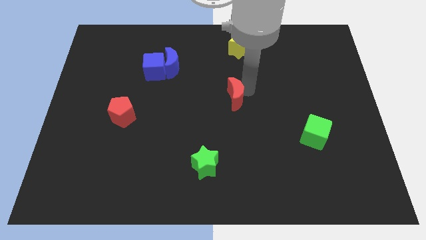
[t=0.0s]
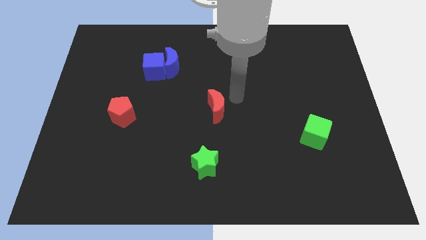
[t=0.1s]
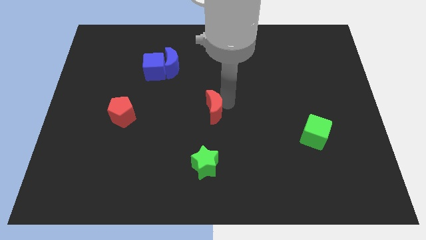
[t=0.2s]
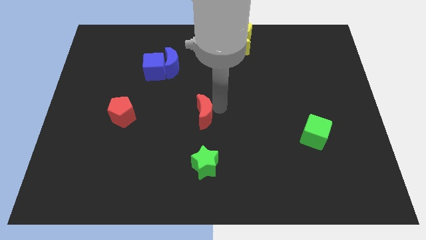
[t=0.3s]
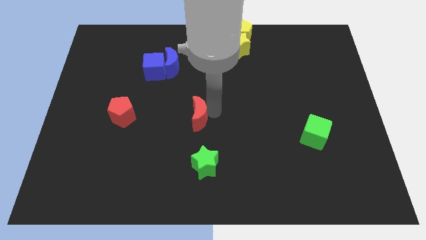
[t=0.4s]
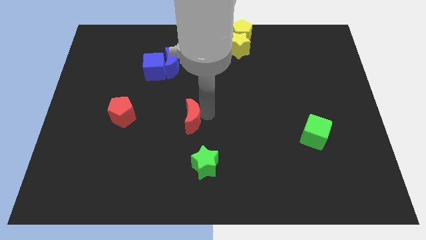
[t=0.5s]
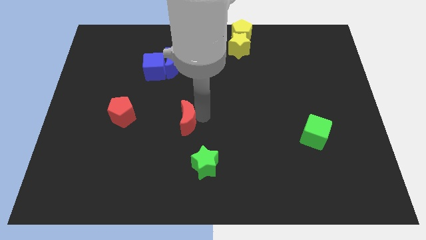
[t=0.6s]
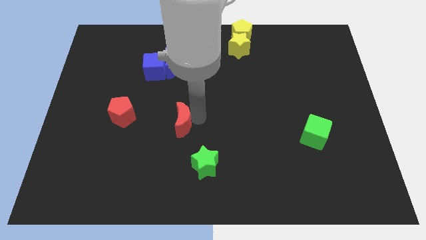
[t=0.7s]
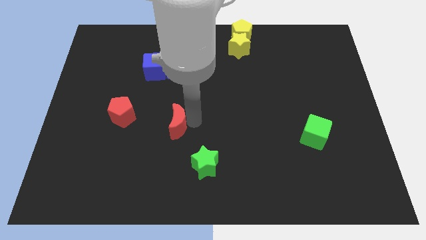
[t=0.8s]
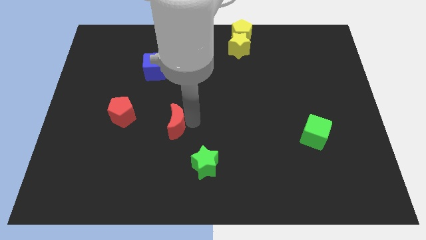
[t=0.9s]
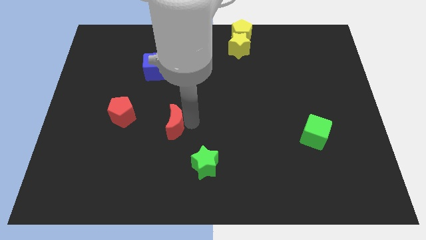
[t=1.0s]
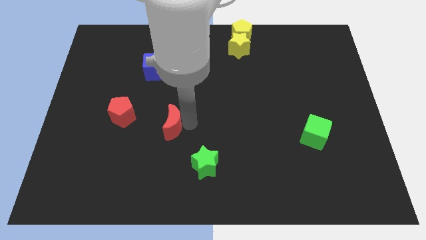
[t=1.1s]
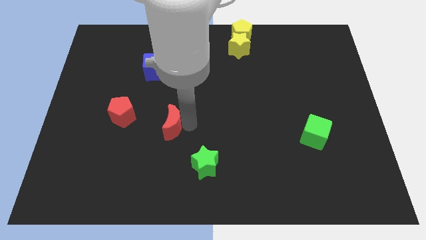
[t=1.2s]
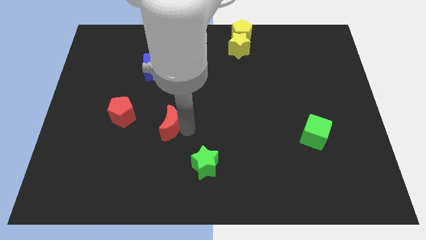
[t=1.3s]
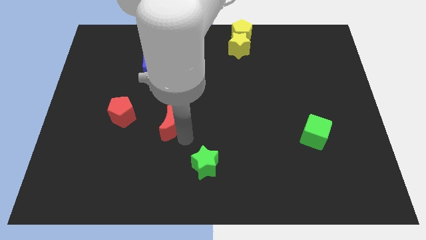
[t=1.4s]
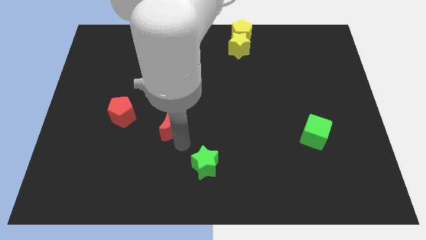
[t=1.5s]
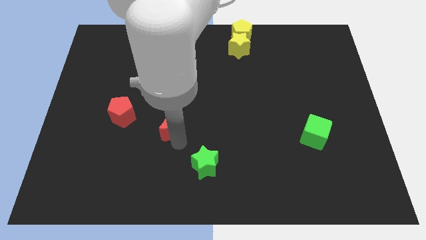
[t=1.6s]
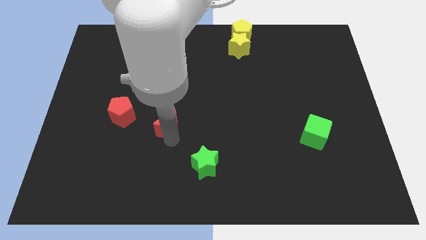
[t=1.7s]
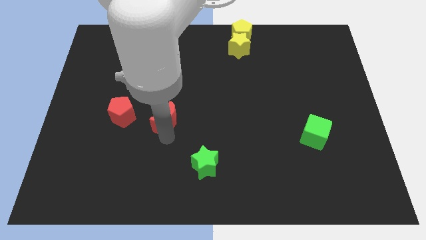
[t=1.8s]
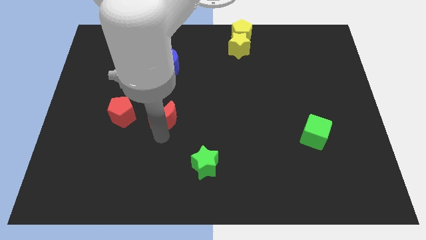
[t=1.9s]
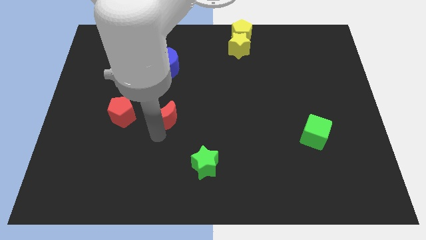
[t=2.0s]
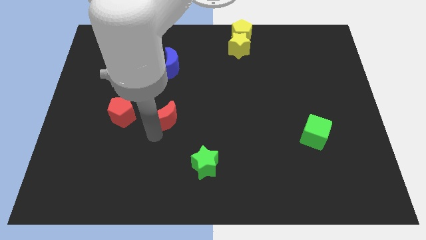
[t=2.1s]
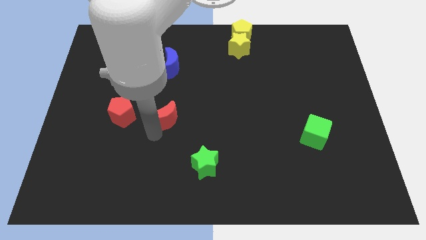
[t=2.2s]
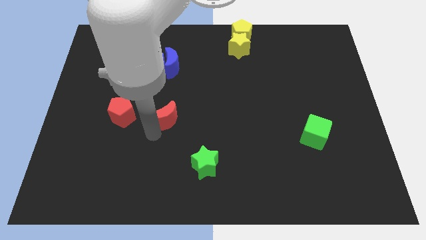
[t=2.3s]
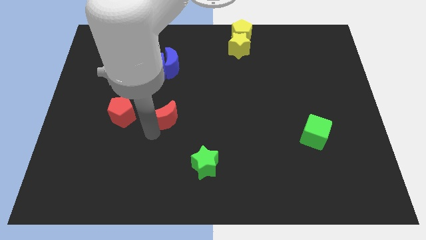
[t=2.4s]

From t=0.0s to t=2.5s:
put the red crescent to the right of the red pentagon

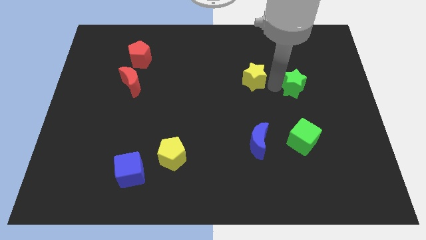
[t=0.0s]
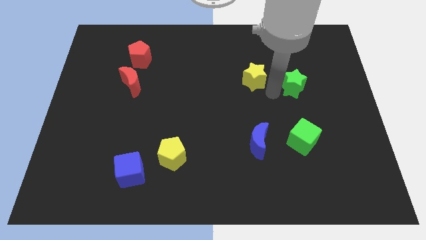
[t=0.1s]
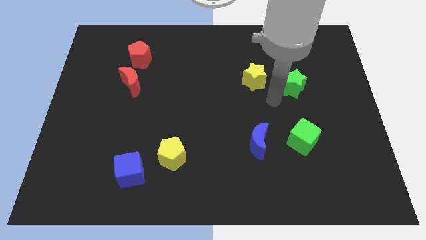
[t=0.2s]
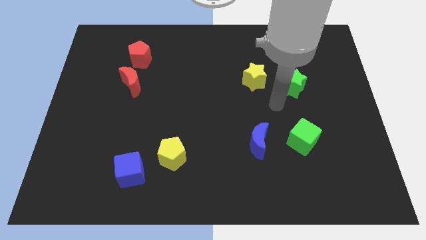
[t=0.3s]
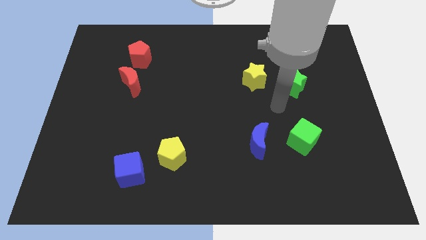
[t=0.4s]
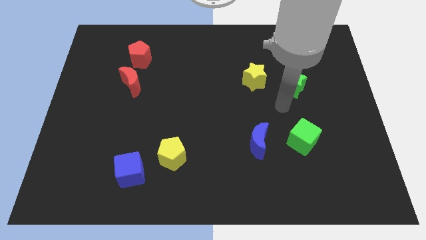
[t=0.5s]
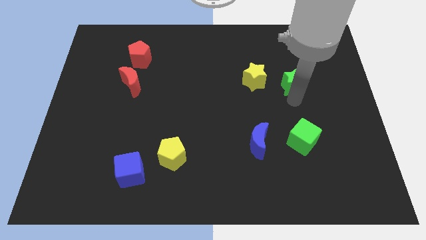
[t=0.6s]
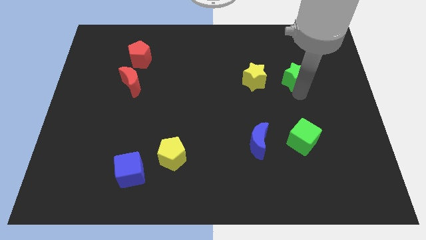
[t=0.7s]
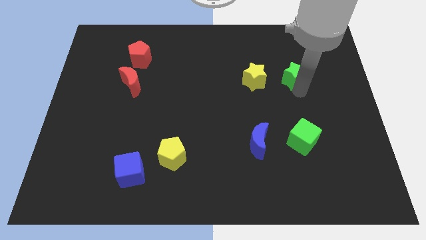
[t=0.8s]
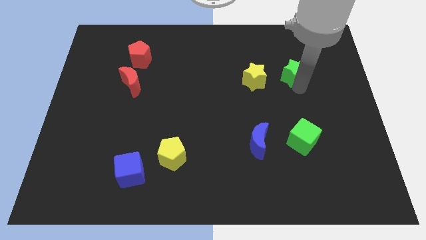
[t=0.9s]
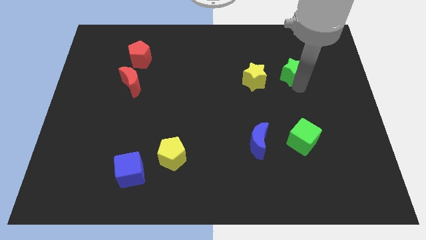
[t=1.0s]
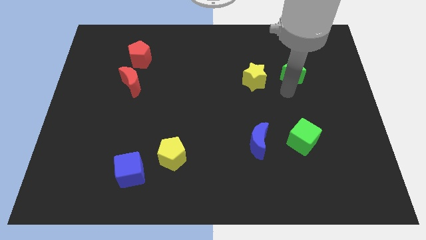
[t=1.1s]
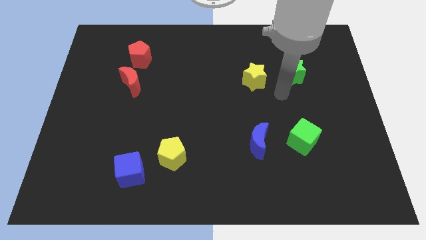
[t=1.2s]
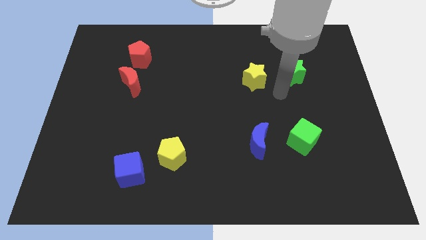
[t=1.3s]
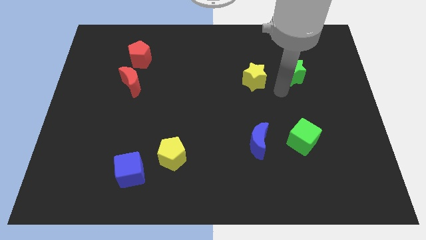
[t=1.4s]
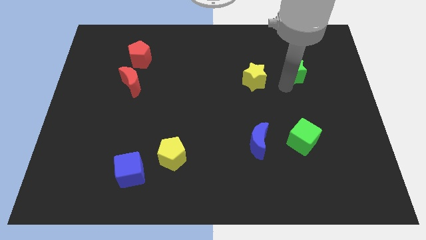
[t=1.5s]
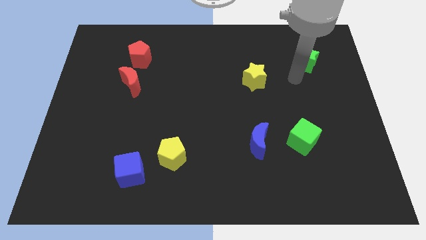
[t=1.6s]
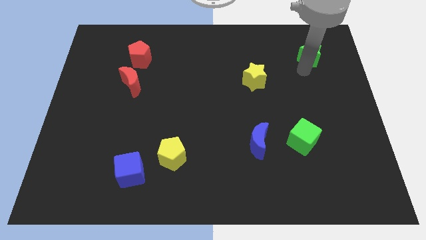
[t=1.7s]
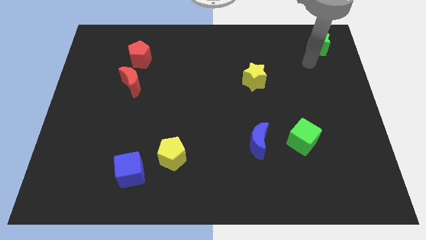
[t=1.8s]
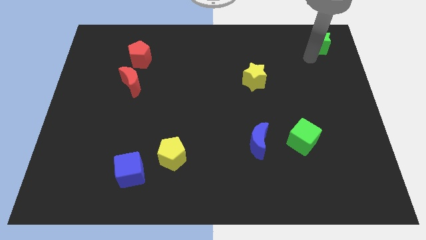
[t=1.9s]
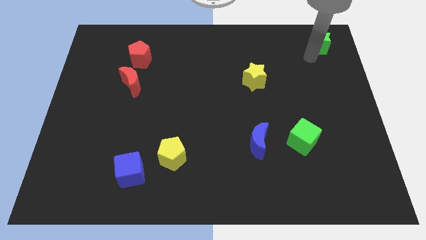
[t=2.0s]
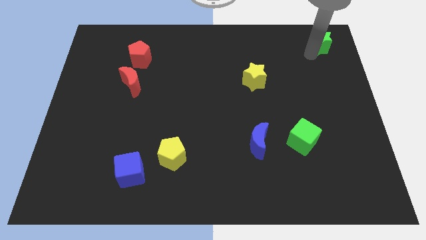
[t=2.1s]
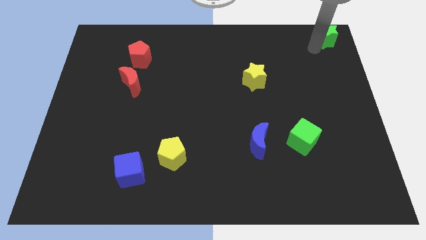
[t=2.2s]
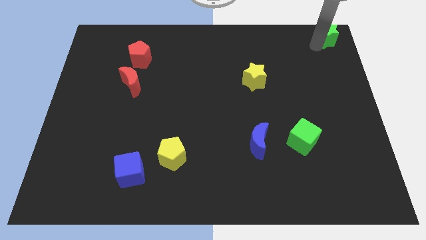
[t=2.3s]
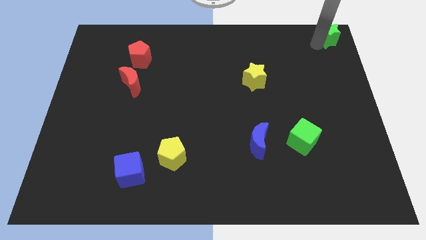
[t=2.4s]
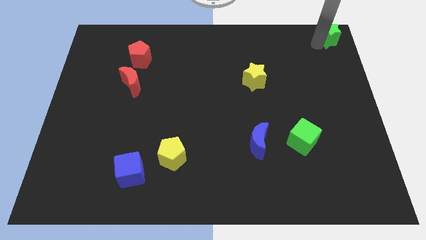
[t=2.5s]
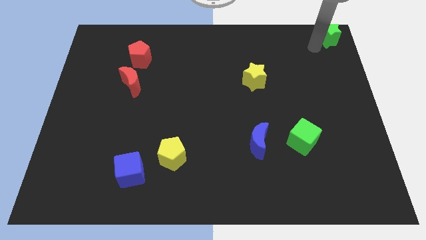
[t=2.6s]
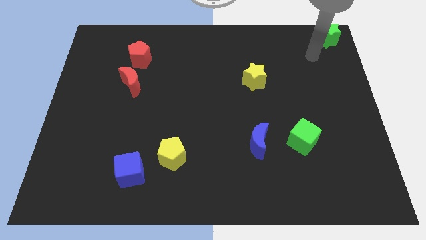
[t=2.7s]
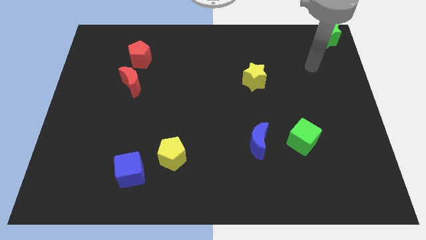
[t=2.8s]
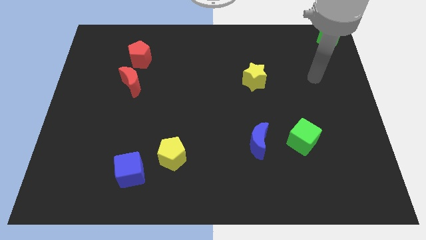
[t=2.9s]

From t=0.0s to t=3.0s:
push the green star to the top right corner of the board

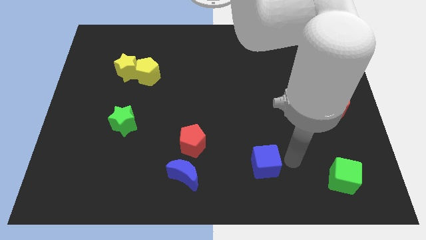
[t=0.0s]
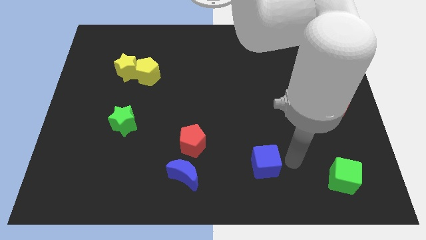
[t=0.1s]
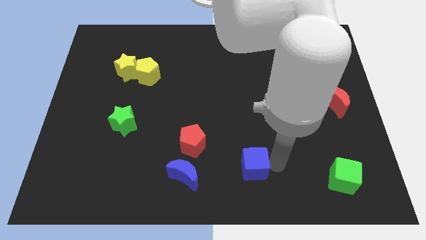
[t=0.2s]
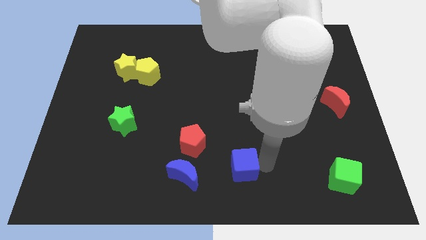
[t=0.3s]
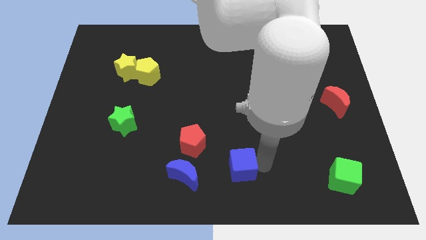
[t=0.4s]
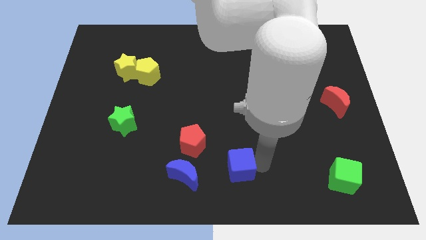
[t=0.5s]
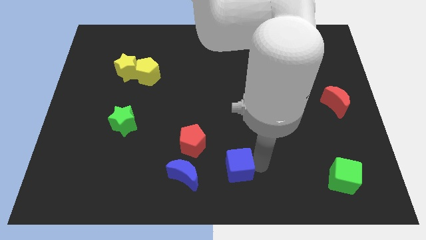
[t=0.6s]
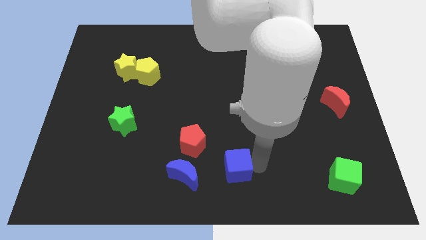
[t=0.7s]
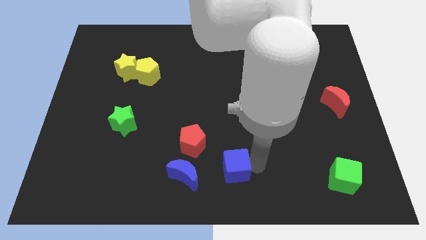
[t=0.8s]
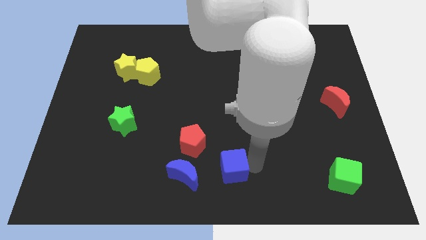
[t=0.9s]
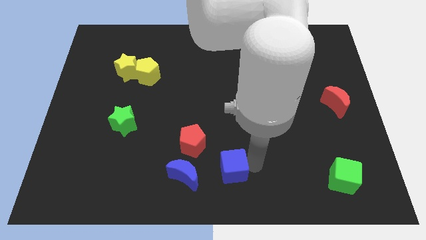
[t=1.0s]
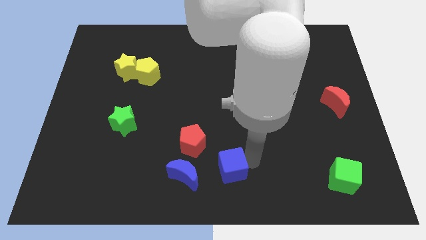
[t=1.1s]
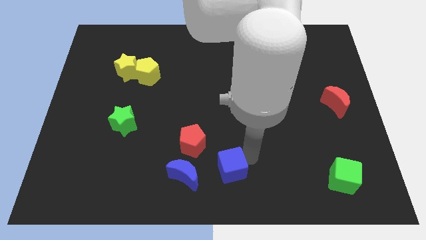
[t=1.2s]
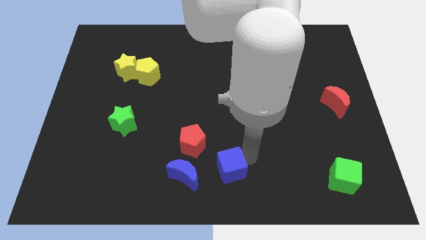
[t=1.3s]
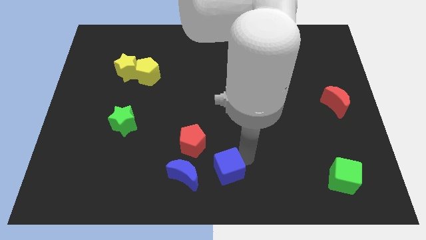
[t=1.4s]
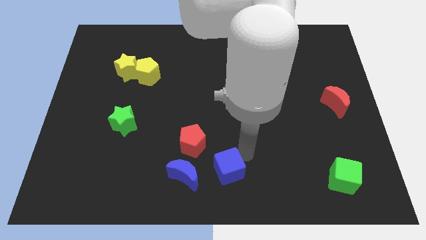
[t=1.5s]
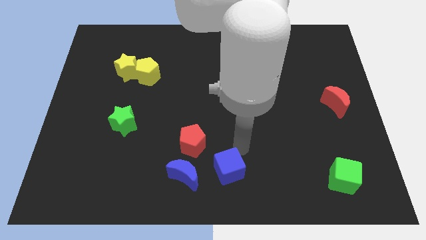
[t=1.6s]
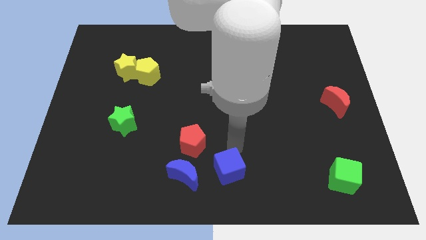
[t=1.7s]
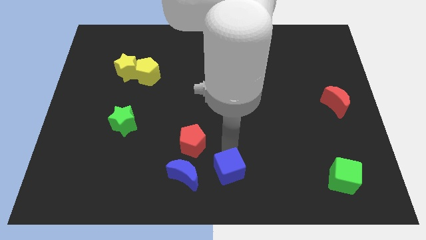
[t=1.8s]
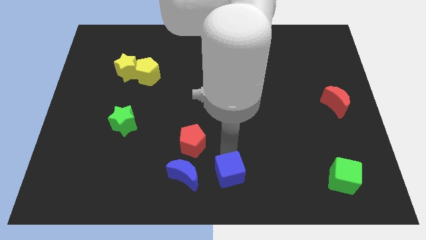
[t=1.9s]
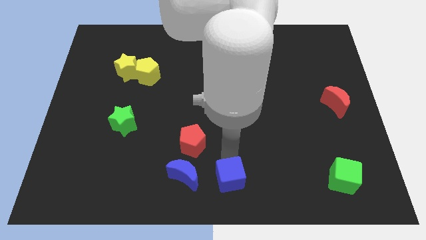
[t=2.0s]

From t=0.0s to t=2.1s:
move blue cube right to the blue crescent

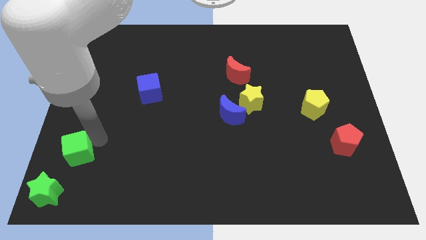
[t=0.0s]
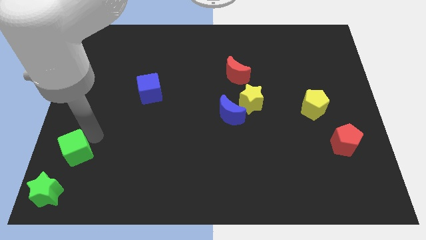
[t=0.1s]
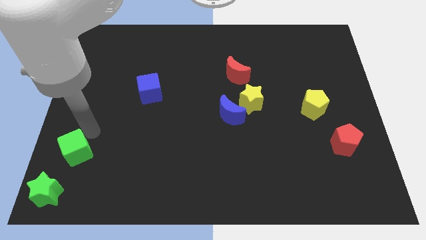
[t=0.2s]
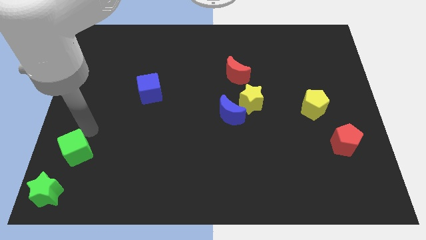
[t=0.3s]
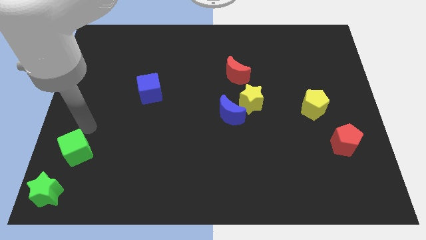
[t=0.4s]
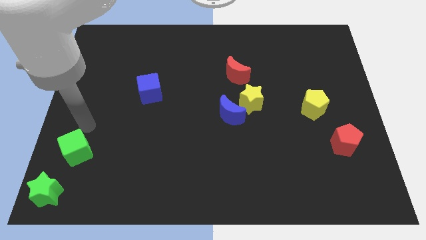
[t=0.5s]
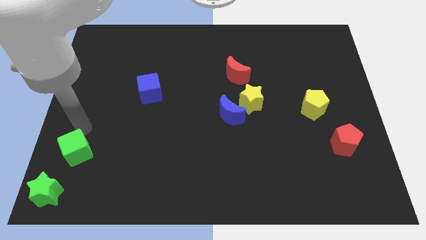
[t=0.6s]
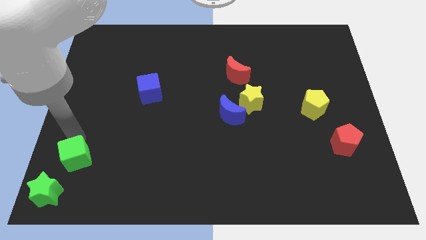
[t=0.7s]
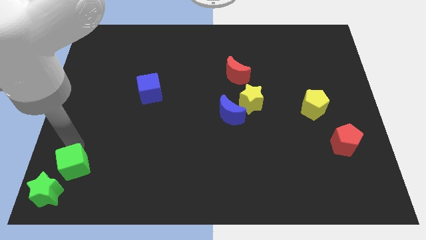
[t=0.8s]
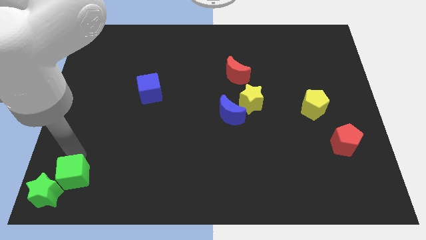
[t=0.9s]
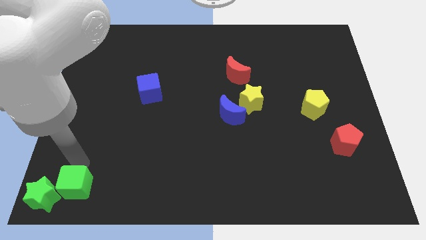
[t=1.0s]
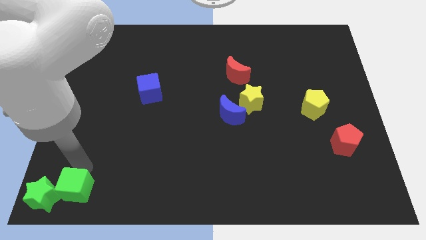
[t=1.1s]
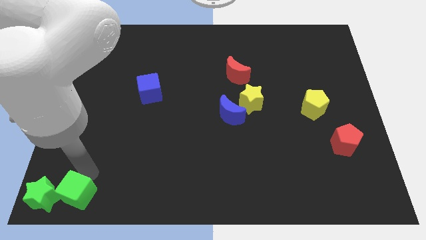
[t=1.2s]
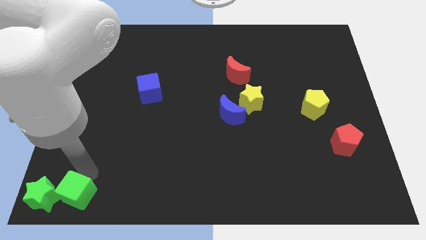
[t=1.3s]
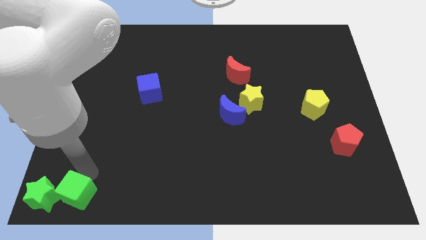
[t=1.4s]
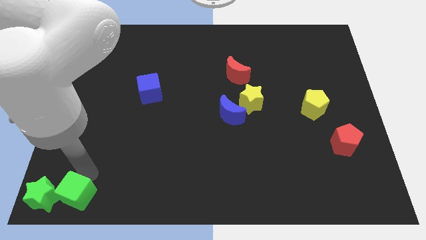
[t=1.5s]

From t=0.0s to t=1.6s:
slide the green cube into the green star
